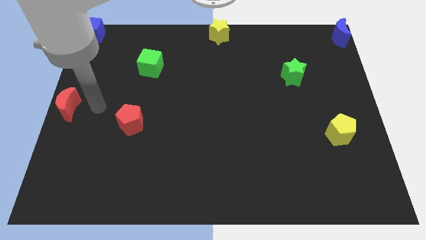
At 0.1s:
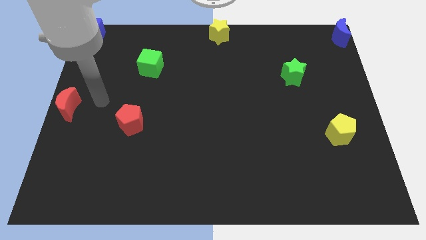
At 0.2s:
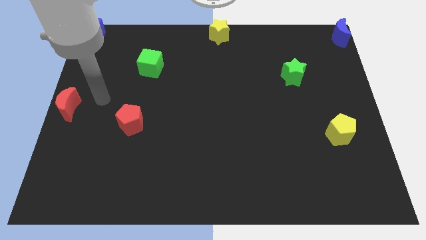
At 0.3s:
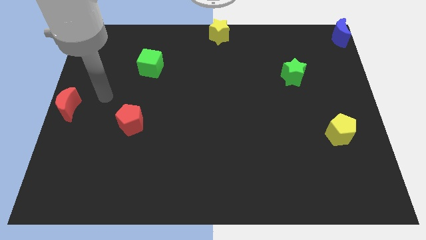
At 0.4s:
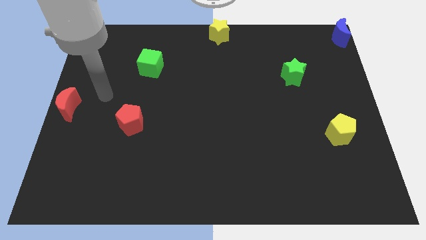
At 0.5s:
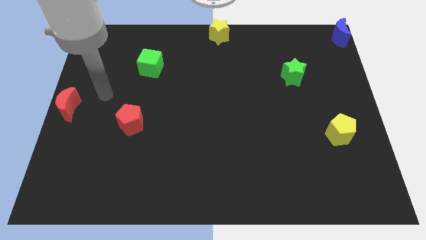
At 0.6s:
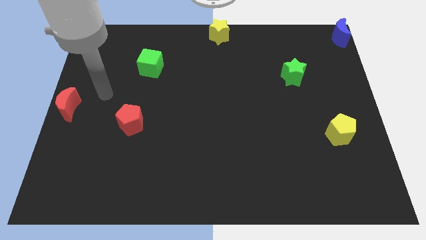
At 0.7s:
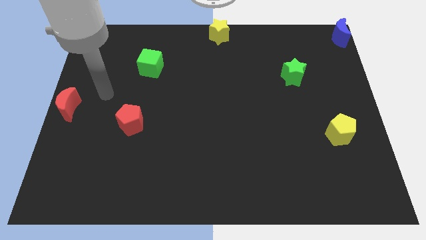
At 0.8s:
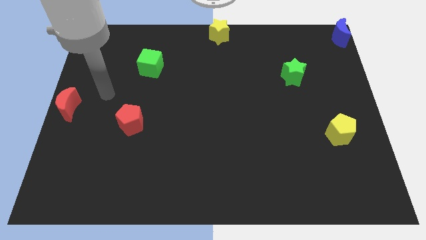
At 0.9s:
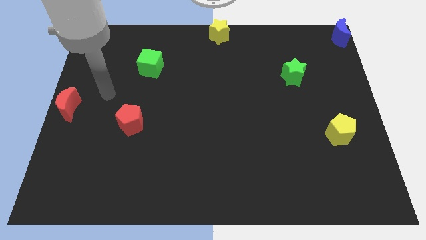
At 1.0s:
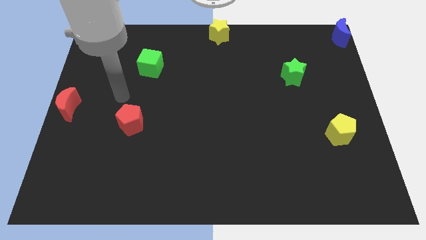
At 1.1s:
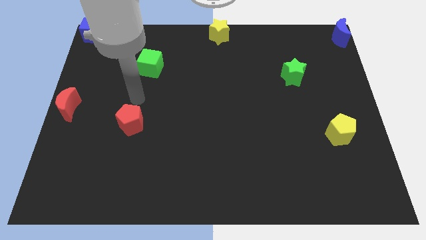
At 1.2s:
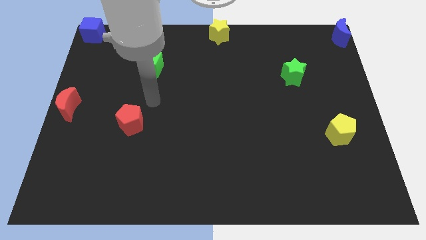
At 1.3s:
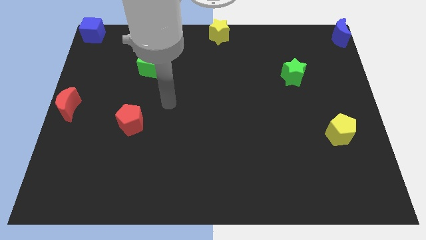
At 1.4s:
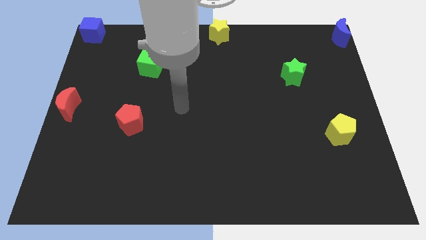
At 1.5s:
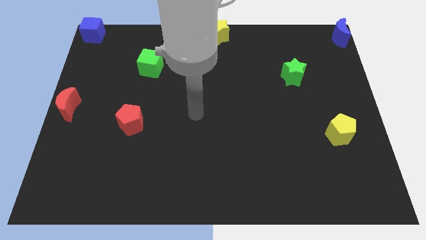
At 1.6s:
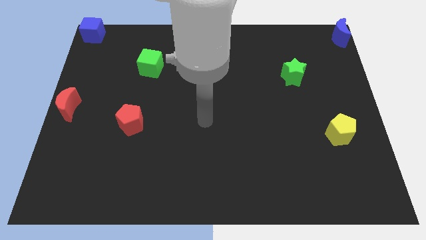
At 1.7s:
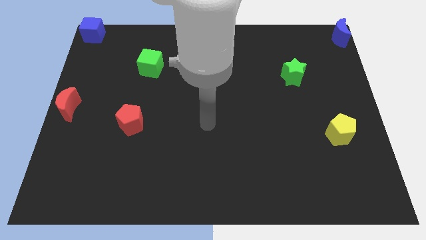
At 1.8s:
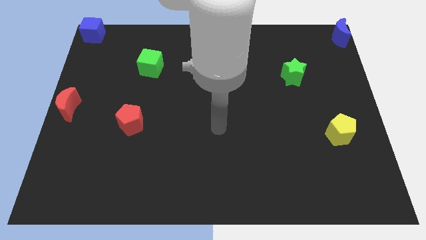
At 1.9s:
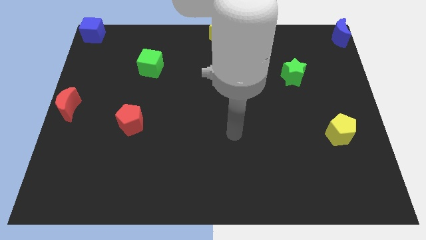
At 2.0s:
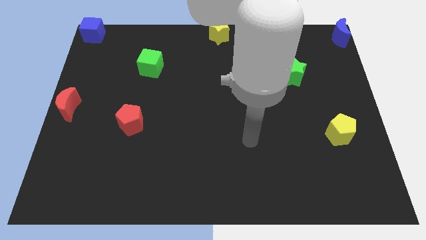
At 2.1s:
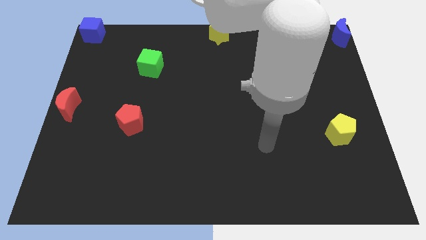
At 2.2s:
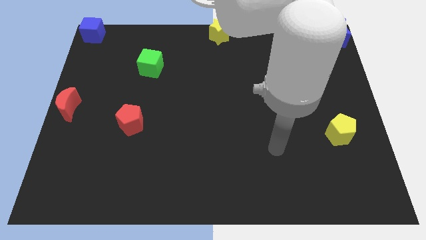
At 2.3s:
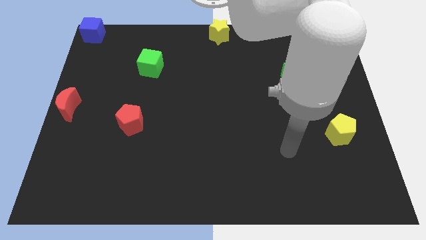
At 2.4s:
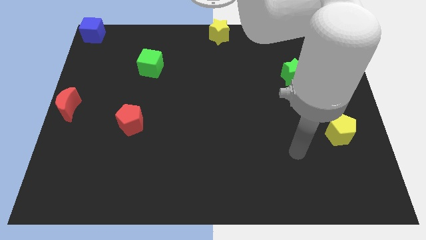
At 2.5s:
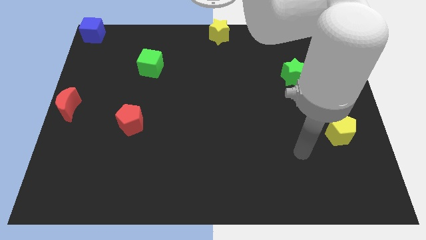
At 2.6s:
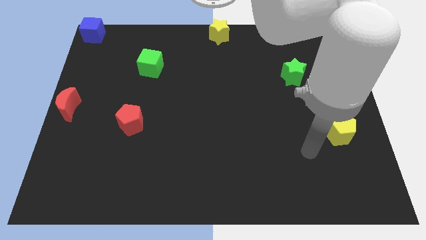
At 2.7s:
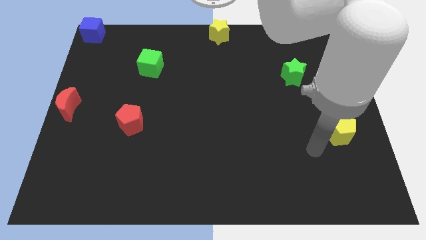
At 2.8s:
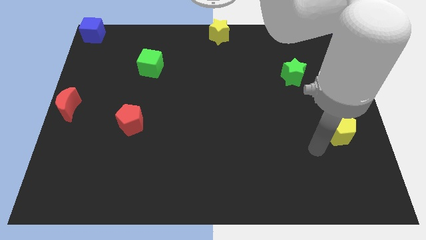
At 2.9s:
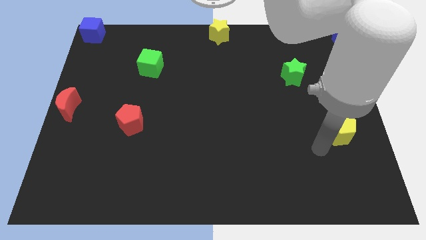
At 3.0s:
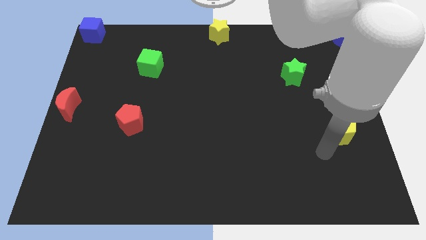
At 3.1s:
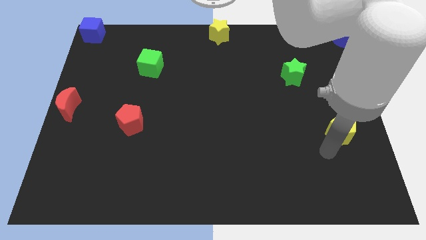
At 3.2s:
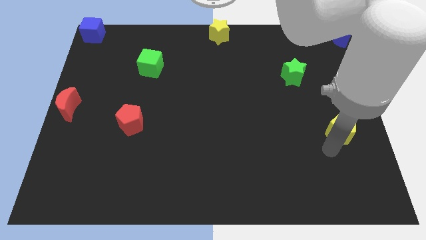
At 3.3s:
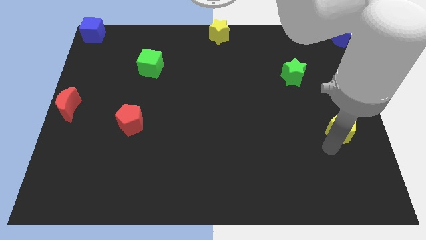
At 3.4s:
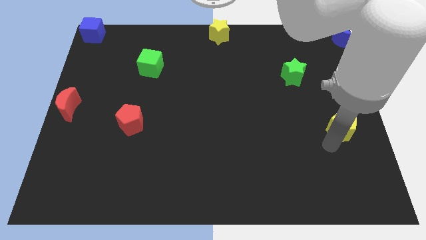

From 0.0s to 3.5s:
go away from the red moon

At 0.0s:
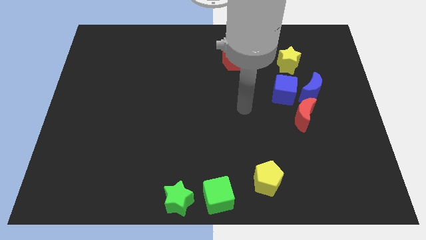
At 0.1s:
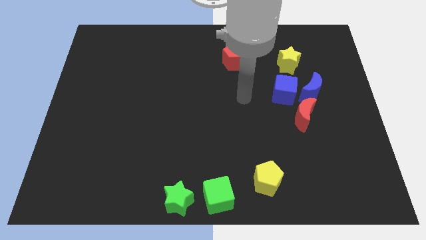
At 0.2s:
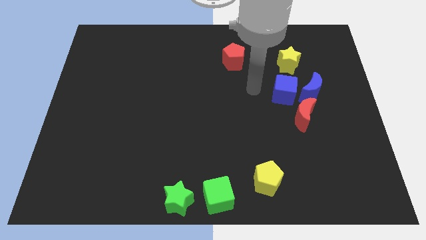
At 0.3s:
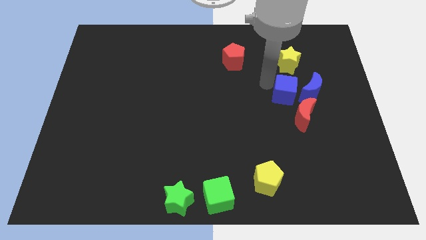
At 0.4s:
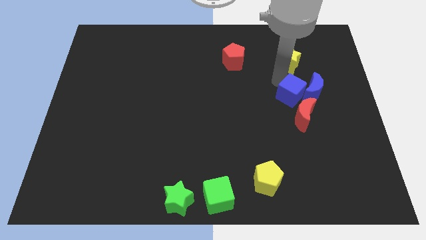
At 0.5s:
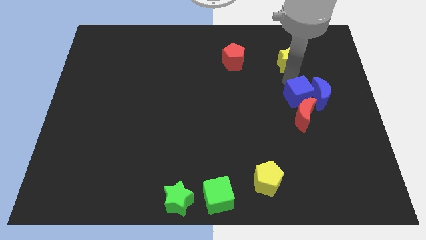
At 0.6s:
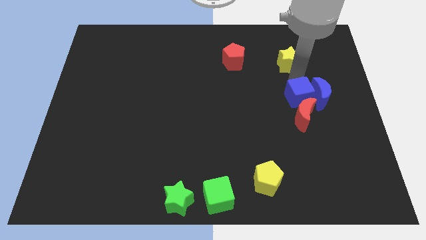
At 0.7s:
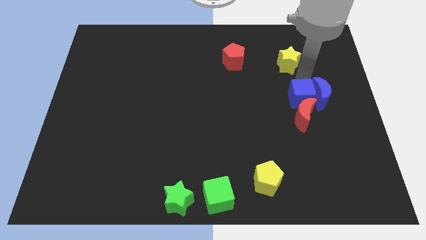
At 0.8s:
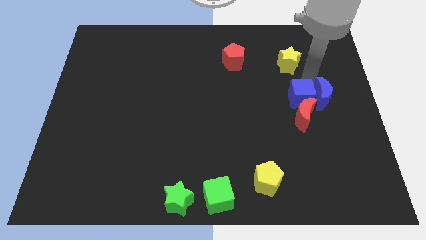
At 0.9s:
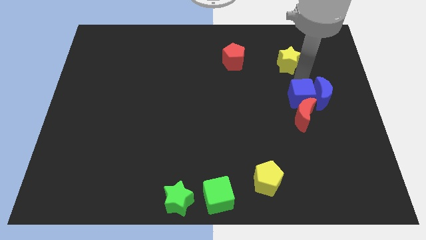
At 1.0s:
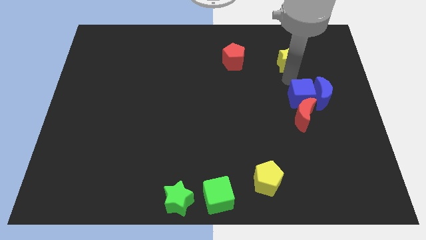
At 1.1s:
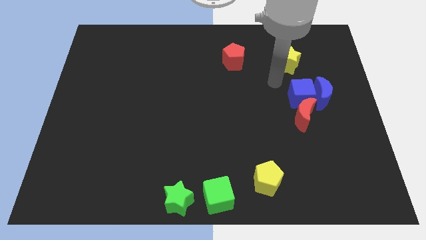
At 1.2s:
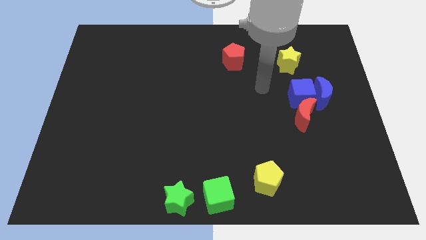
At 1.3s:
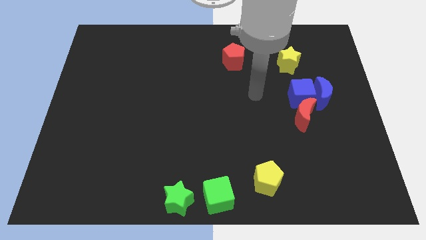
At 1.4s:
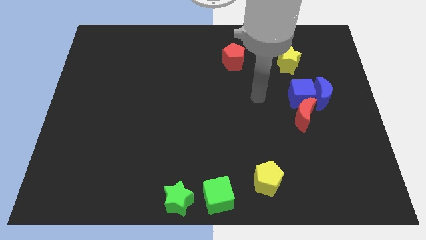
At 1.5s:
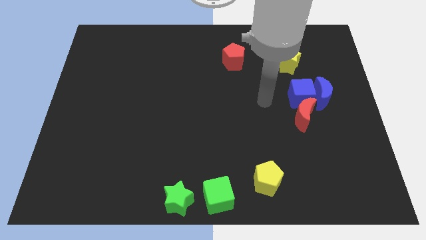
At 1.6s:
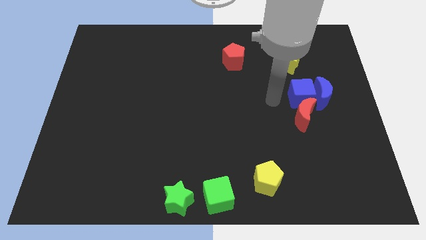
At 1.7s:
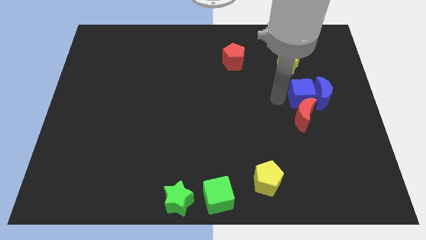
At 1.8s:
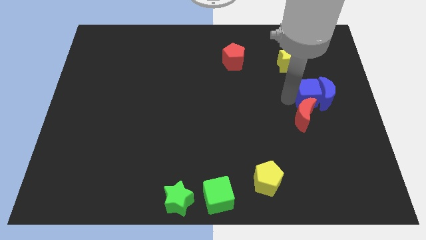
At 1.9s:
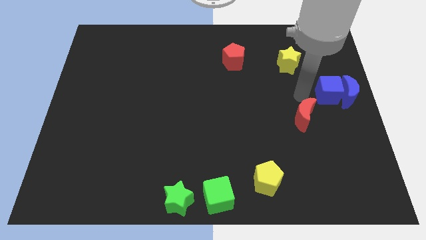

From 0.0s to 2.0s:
push the blue cube to the top of the red crescent

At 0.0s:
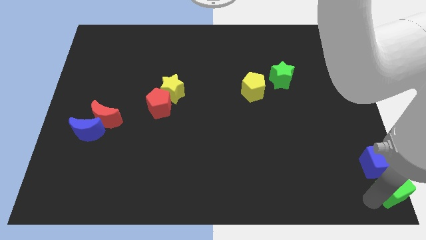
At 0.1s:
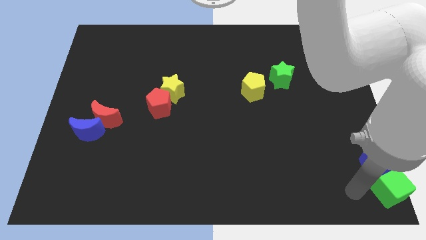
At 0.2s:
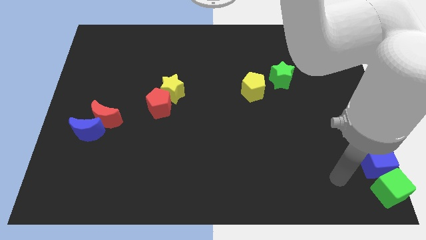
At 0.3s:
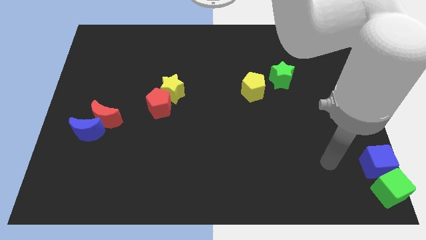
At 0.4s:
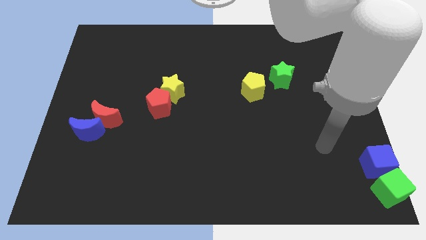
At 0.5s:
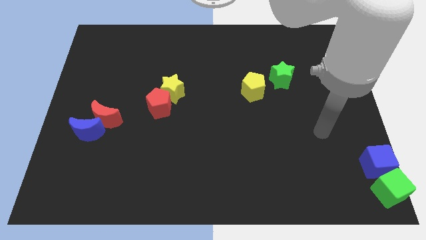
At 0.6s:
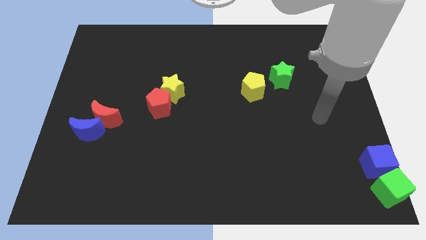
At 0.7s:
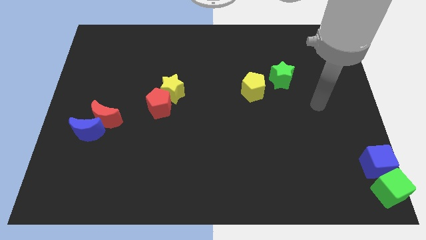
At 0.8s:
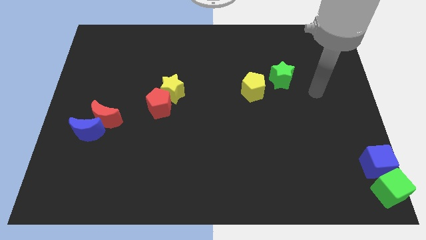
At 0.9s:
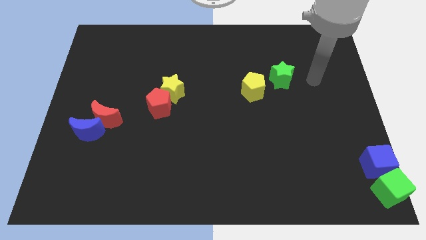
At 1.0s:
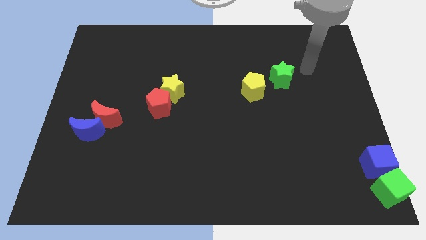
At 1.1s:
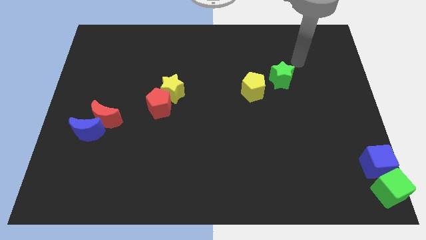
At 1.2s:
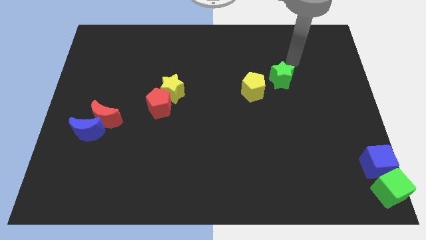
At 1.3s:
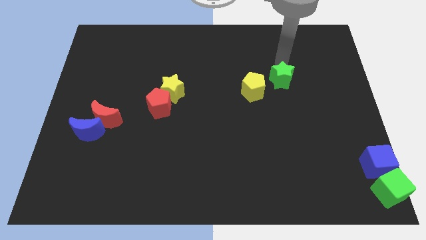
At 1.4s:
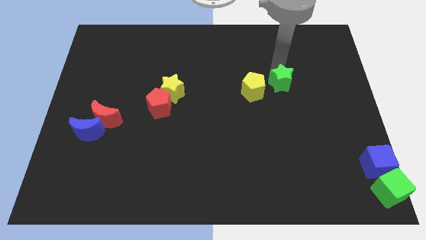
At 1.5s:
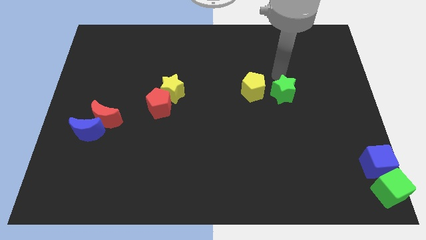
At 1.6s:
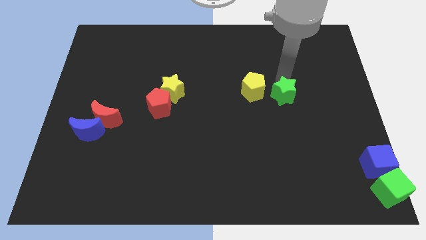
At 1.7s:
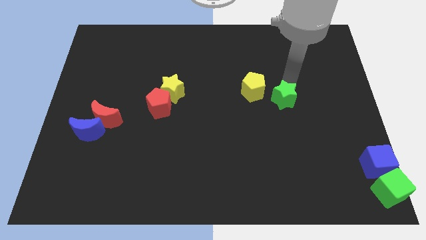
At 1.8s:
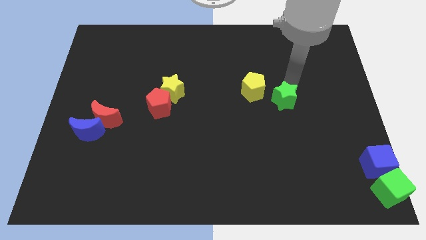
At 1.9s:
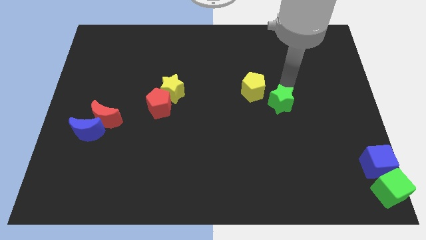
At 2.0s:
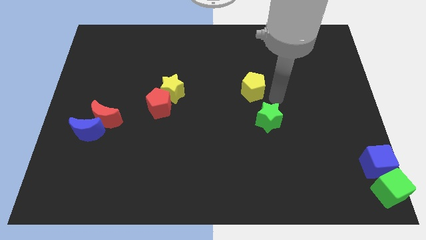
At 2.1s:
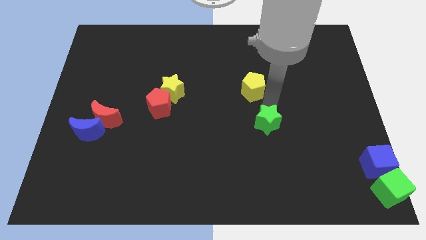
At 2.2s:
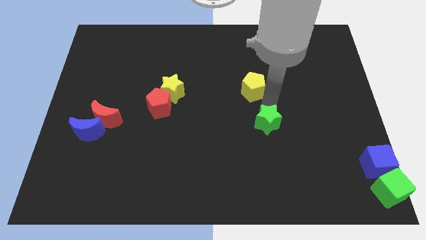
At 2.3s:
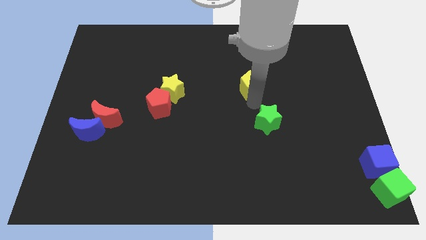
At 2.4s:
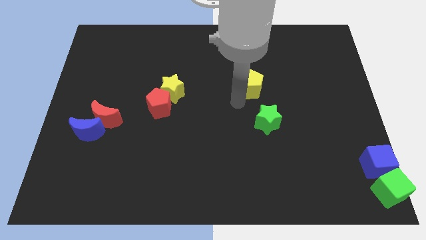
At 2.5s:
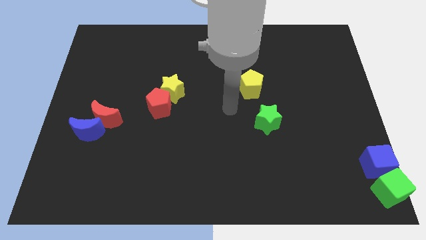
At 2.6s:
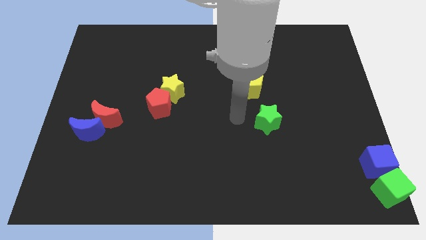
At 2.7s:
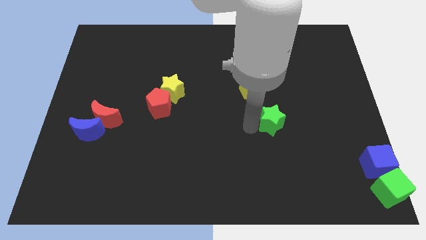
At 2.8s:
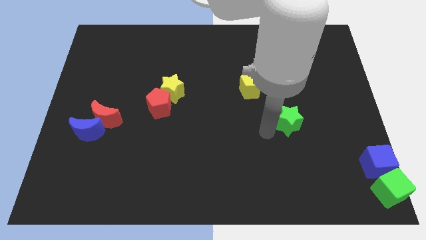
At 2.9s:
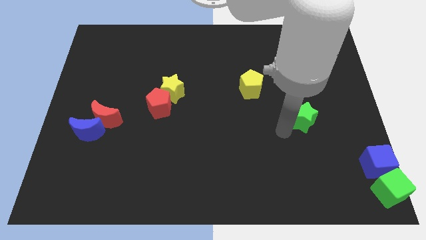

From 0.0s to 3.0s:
slide the green star towards the right center

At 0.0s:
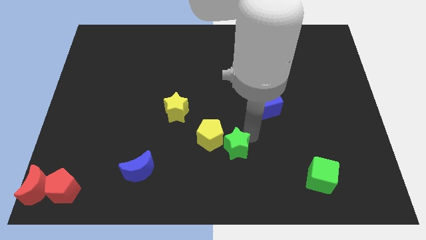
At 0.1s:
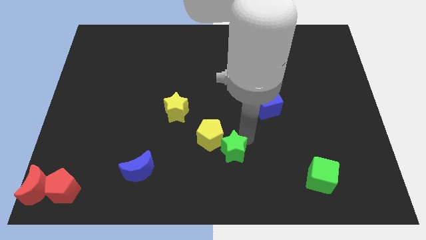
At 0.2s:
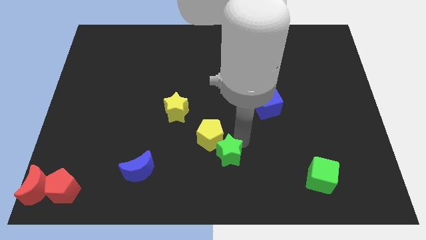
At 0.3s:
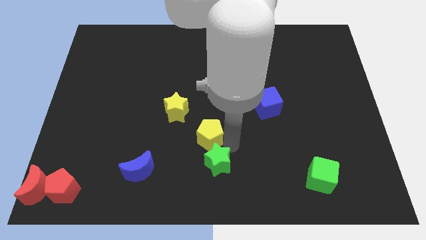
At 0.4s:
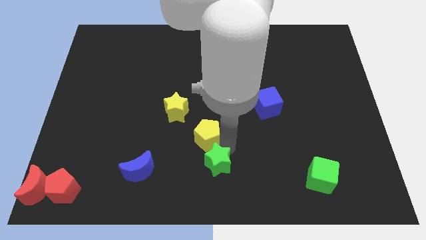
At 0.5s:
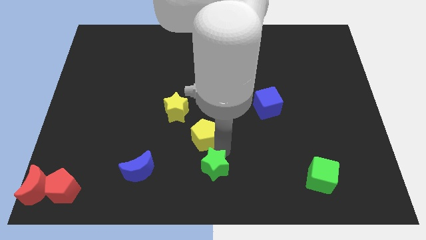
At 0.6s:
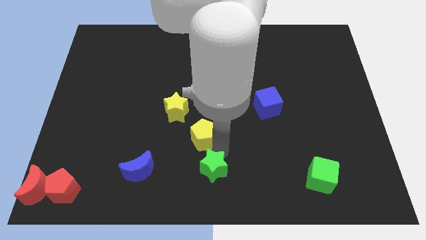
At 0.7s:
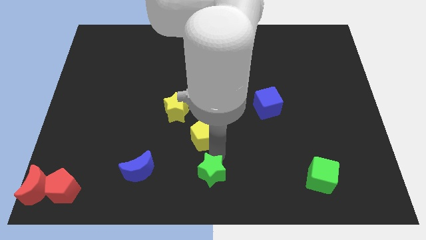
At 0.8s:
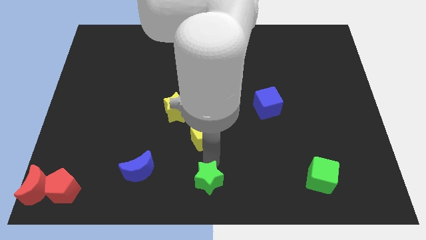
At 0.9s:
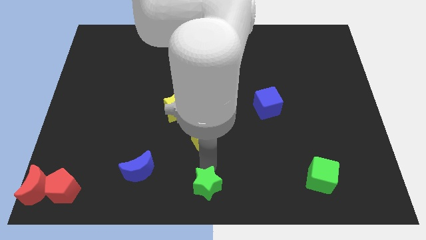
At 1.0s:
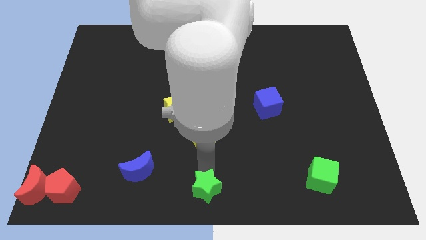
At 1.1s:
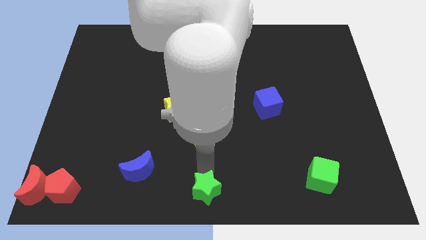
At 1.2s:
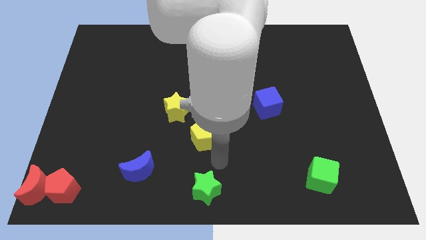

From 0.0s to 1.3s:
place the green star at the bottom center of the board
